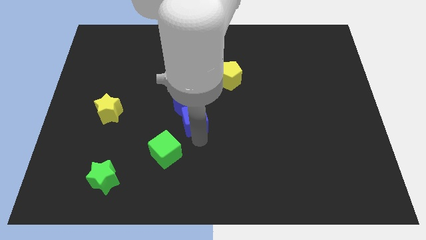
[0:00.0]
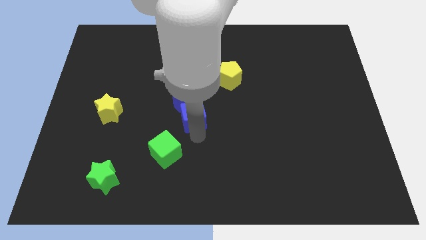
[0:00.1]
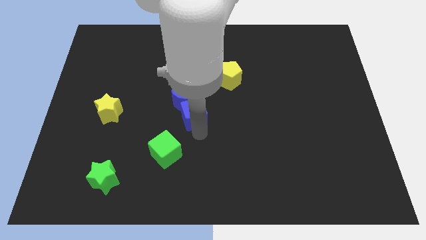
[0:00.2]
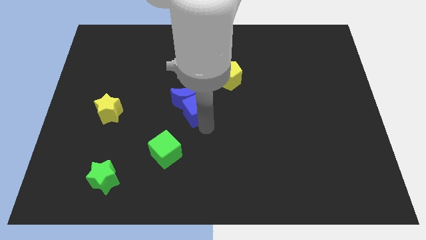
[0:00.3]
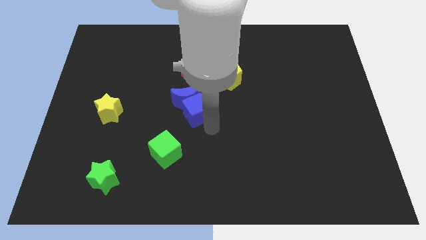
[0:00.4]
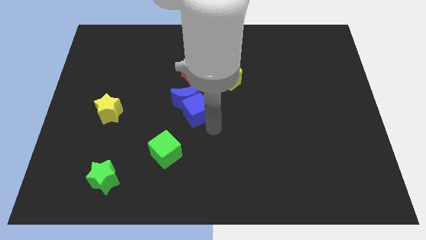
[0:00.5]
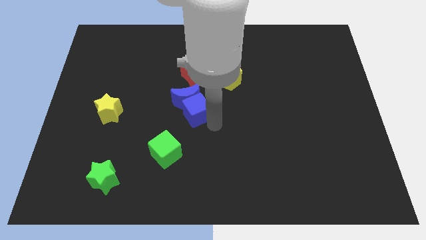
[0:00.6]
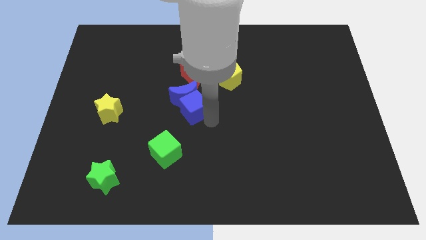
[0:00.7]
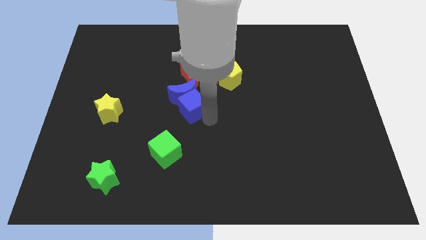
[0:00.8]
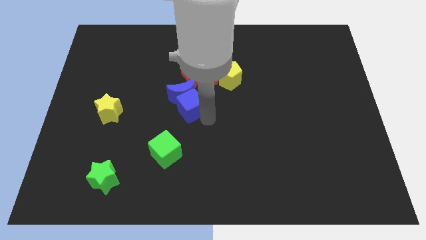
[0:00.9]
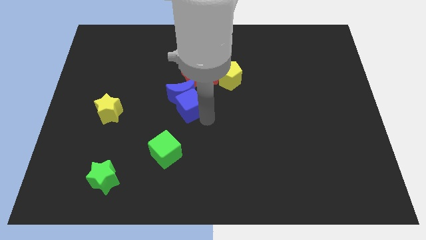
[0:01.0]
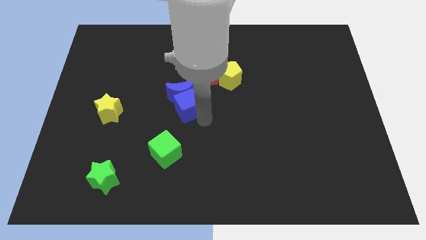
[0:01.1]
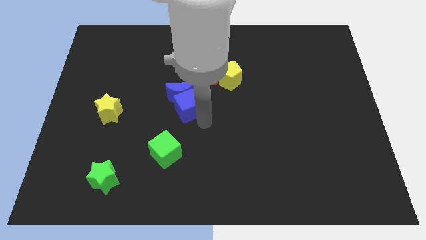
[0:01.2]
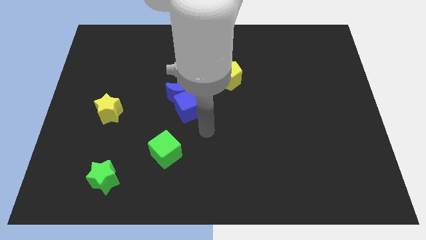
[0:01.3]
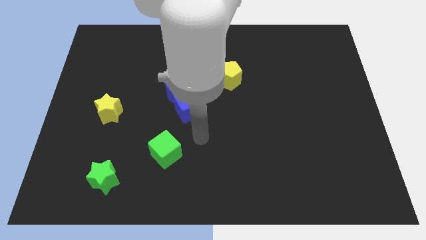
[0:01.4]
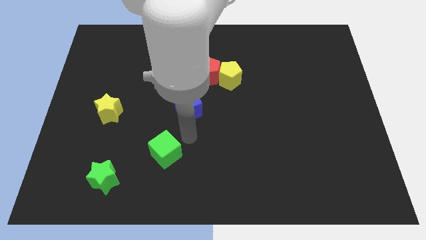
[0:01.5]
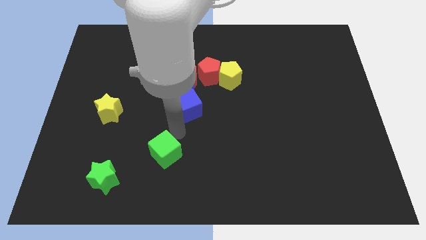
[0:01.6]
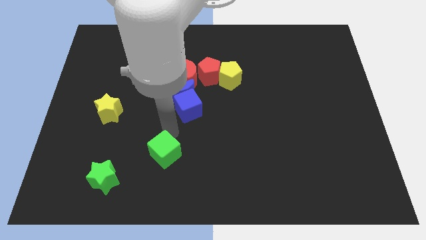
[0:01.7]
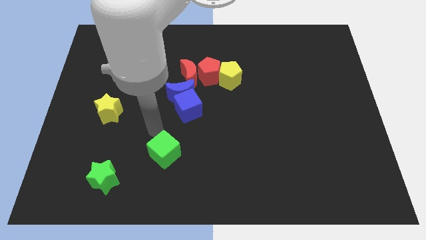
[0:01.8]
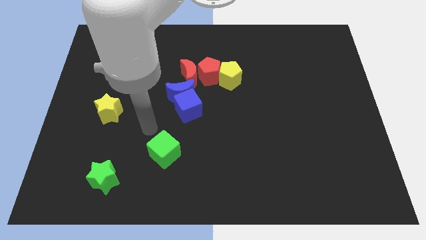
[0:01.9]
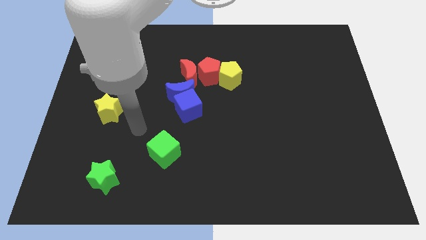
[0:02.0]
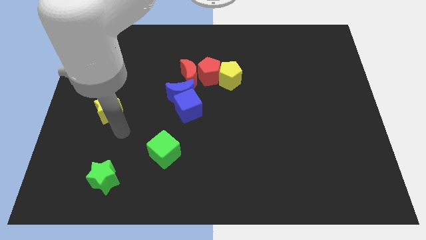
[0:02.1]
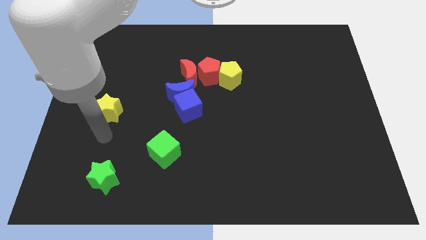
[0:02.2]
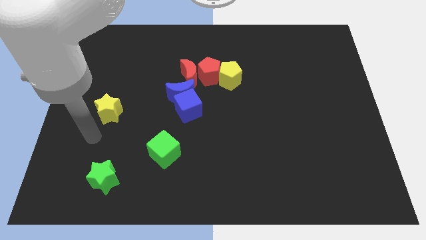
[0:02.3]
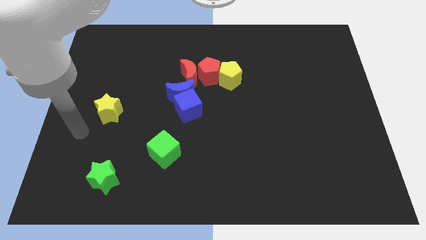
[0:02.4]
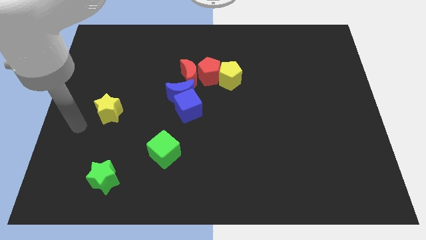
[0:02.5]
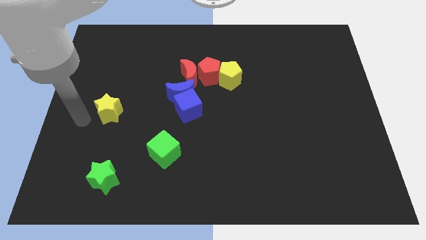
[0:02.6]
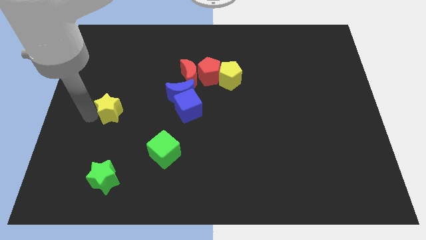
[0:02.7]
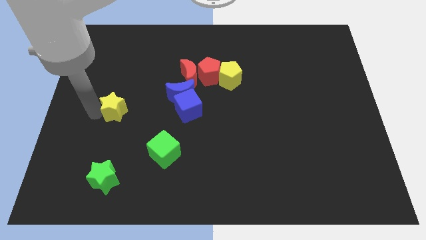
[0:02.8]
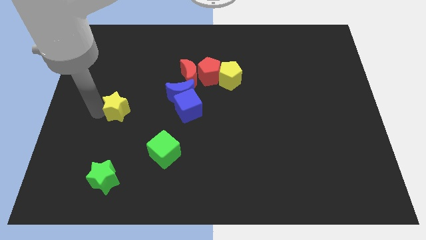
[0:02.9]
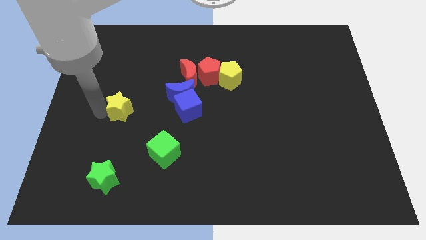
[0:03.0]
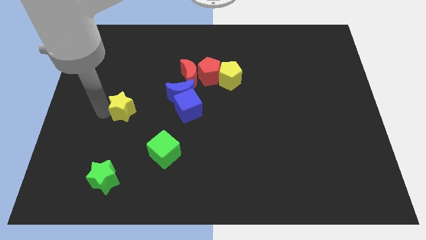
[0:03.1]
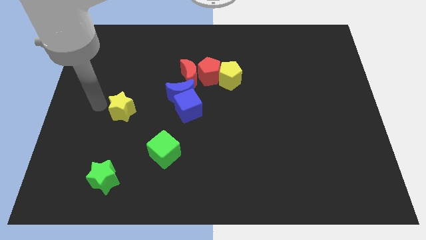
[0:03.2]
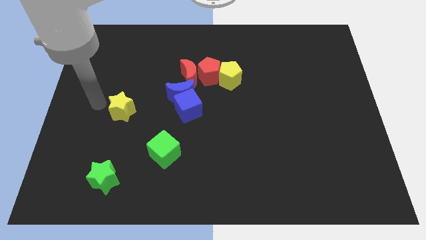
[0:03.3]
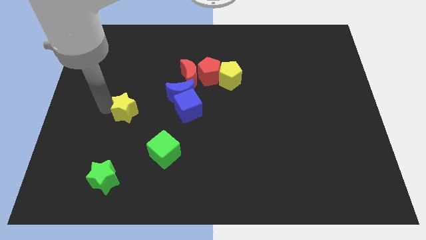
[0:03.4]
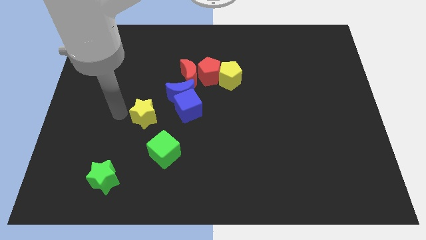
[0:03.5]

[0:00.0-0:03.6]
move blue block along with blue crescent to the bottom of the red crescent

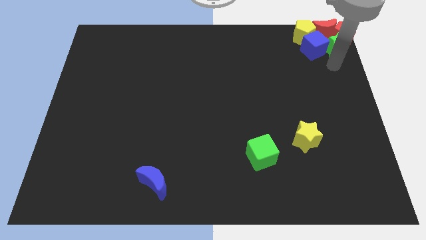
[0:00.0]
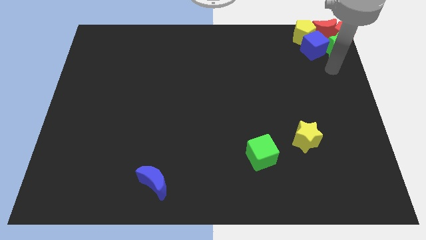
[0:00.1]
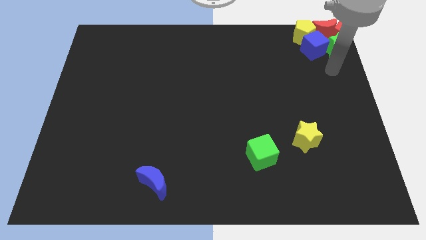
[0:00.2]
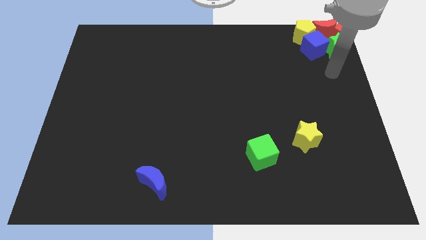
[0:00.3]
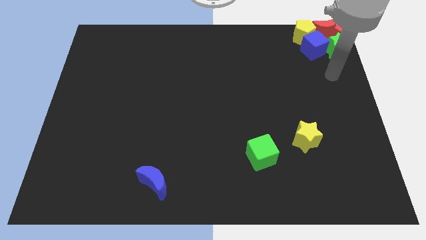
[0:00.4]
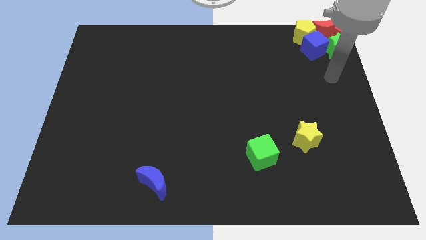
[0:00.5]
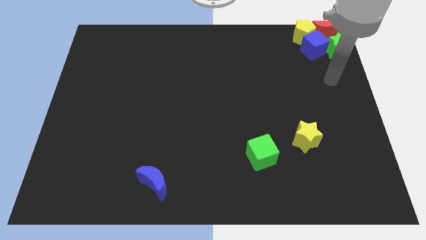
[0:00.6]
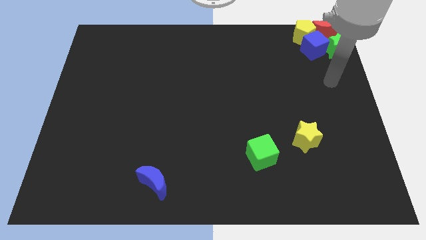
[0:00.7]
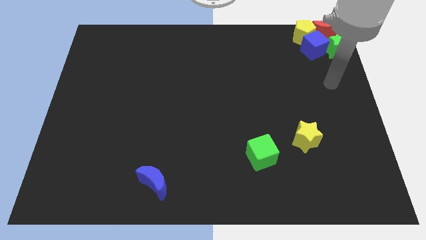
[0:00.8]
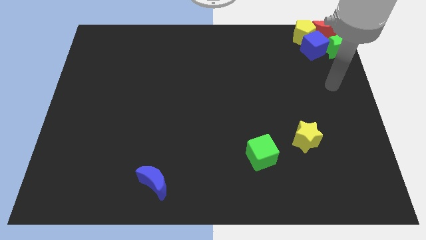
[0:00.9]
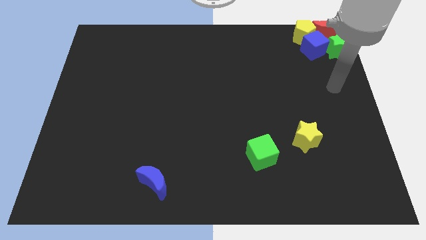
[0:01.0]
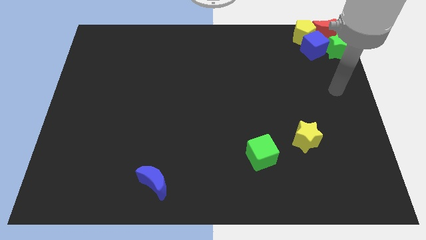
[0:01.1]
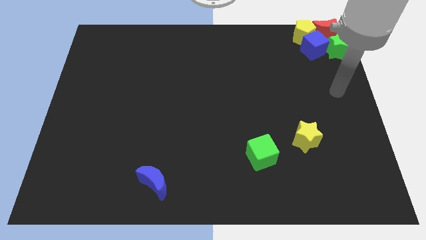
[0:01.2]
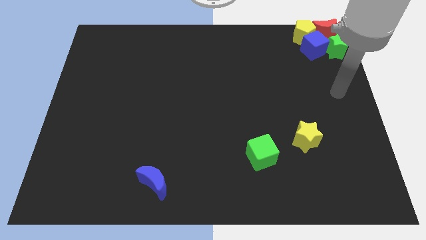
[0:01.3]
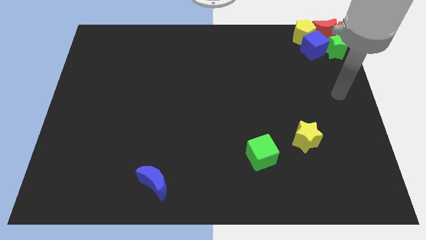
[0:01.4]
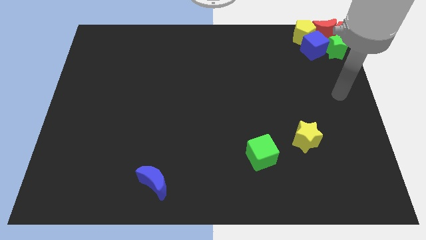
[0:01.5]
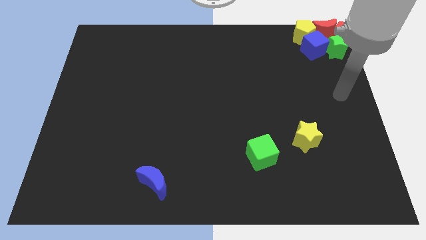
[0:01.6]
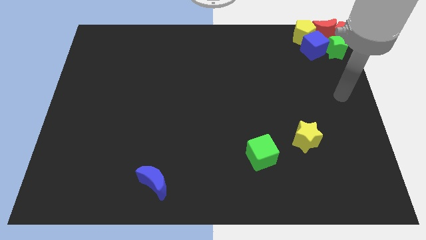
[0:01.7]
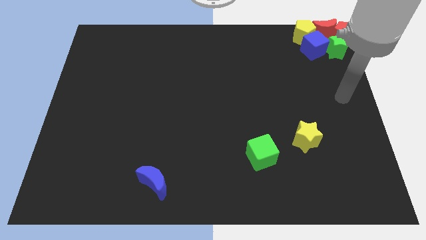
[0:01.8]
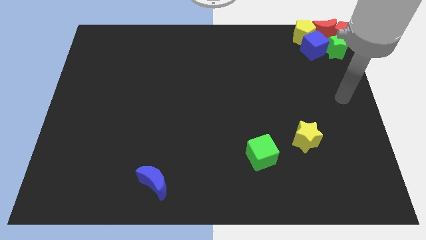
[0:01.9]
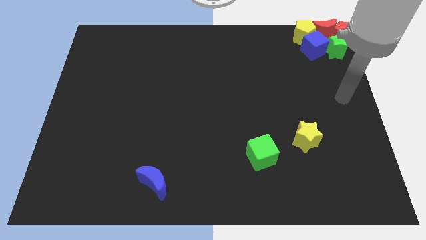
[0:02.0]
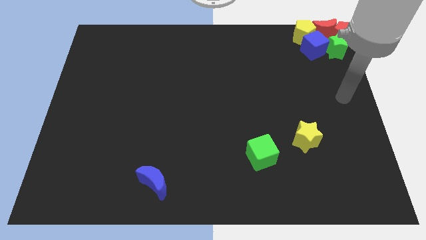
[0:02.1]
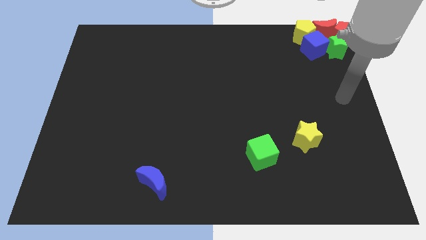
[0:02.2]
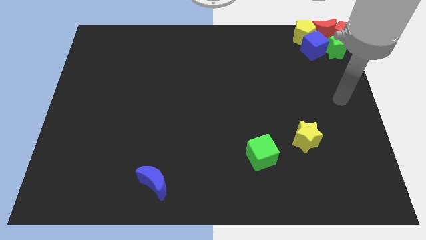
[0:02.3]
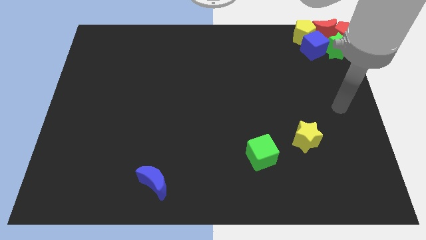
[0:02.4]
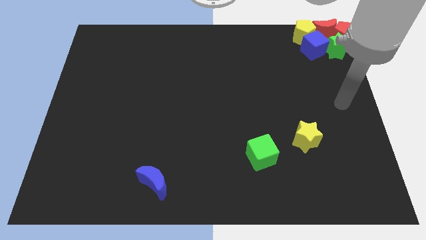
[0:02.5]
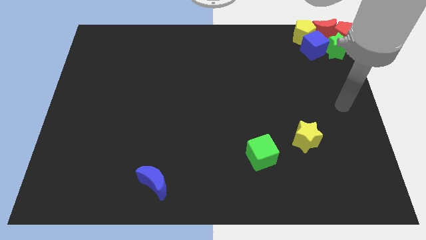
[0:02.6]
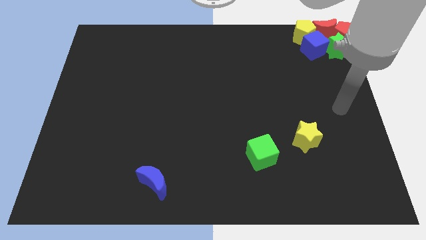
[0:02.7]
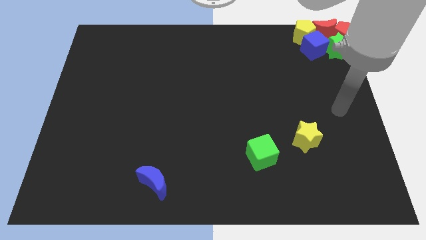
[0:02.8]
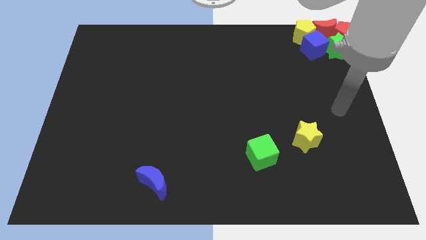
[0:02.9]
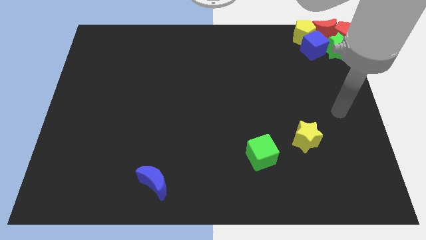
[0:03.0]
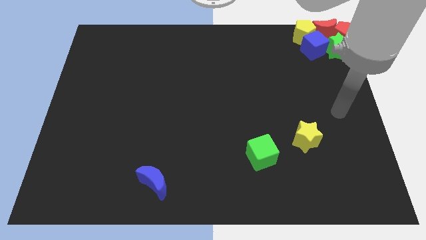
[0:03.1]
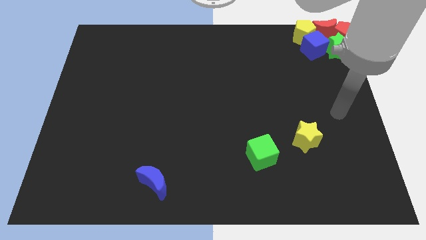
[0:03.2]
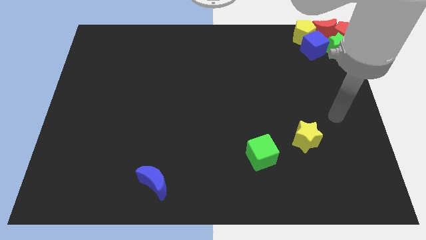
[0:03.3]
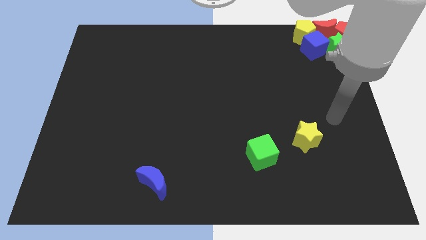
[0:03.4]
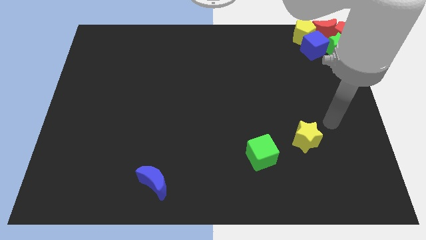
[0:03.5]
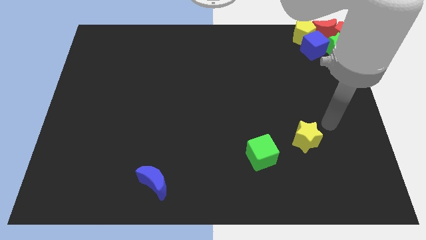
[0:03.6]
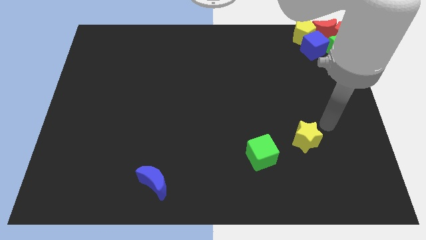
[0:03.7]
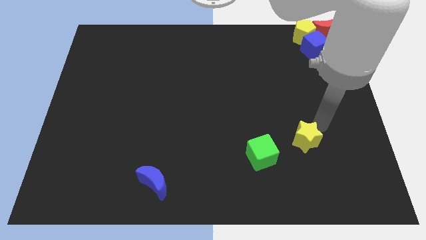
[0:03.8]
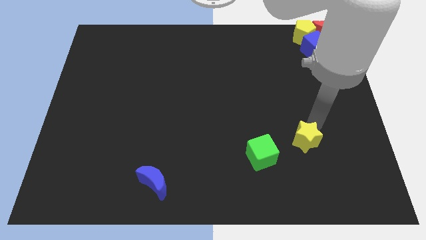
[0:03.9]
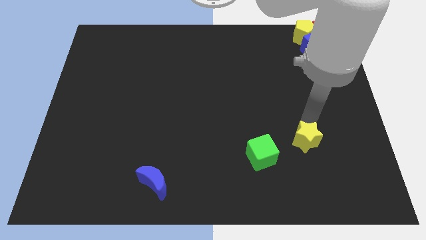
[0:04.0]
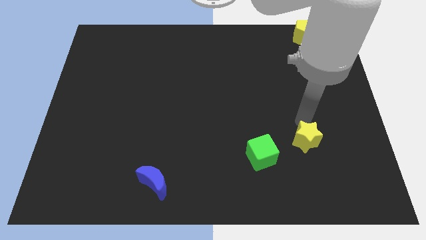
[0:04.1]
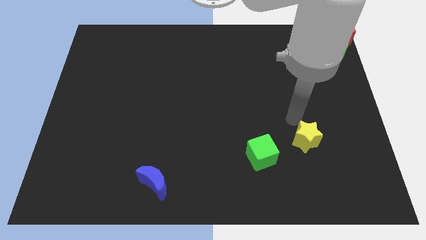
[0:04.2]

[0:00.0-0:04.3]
move your arm into the yellow star

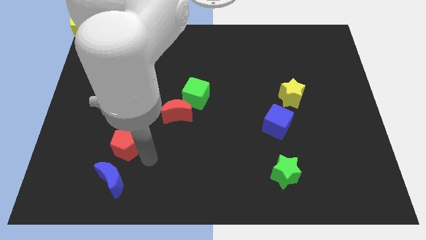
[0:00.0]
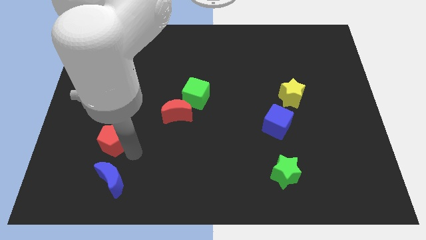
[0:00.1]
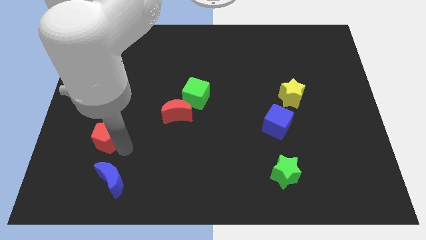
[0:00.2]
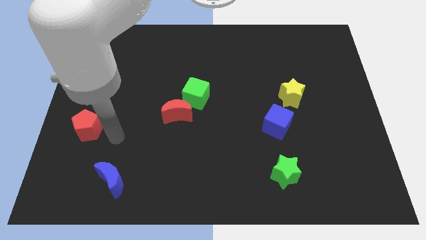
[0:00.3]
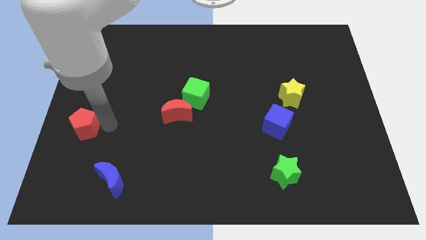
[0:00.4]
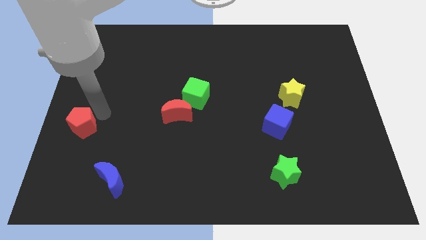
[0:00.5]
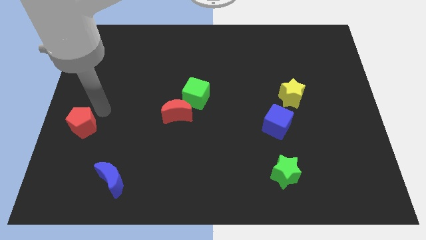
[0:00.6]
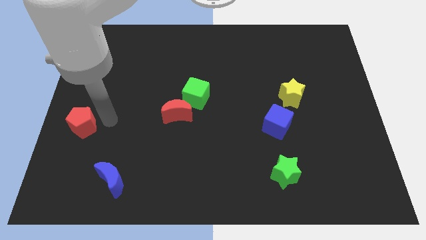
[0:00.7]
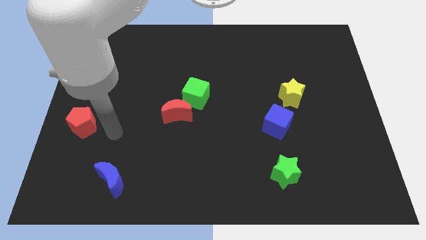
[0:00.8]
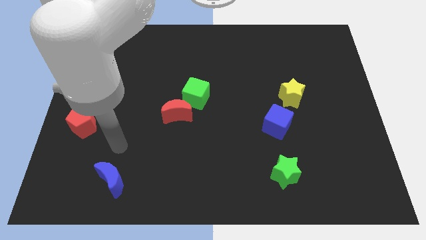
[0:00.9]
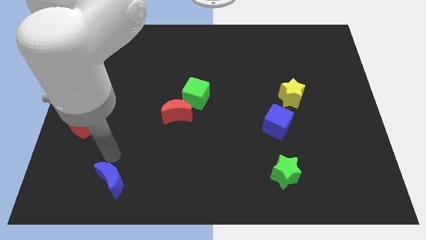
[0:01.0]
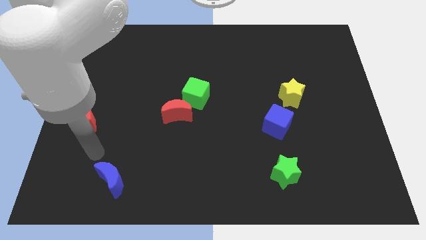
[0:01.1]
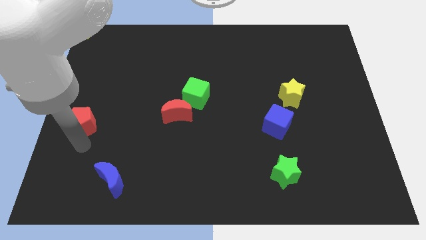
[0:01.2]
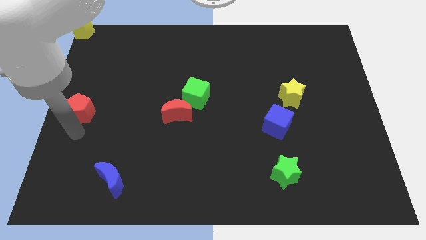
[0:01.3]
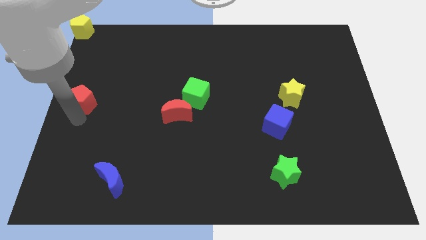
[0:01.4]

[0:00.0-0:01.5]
push the red pentagon left center of the board
